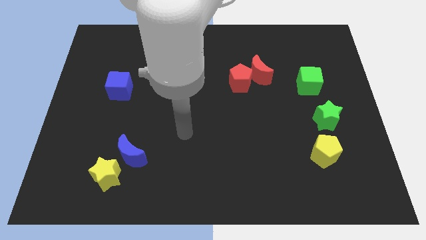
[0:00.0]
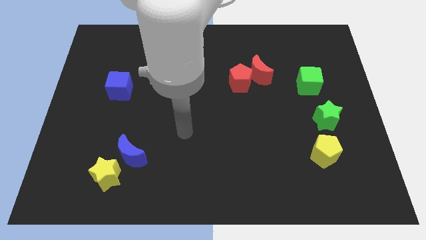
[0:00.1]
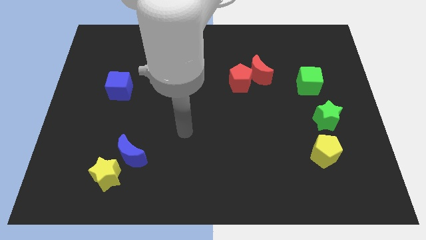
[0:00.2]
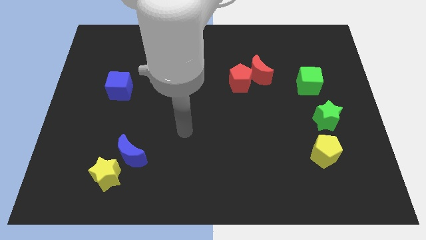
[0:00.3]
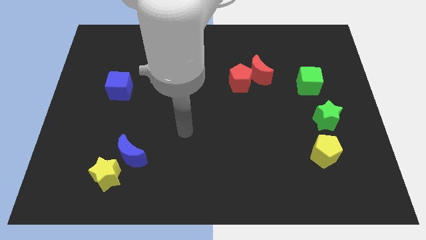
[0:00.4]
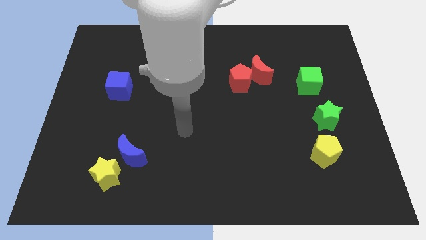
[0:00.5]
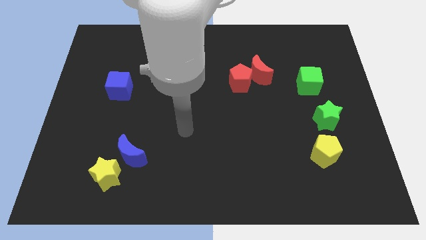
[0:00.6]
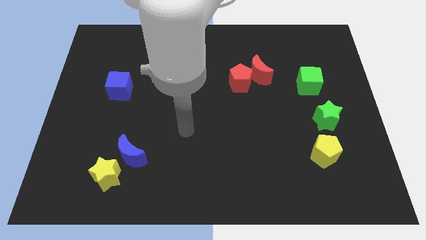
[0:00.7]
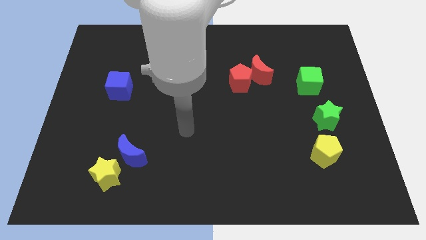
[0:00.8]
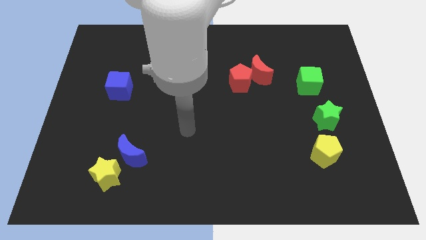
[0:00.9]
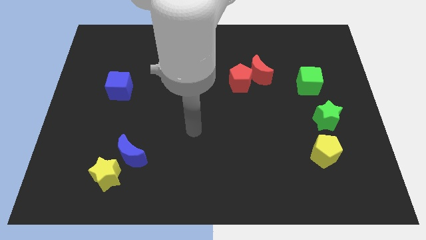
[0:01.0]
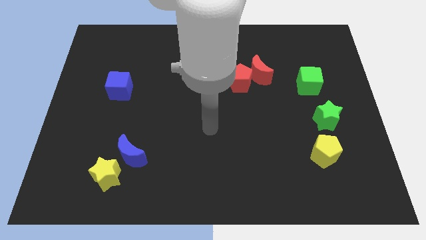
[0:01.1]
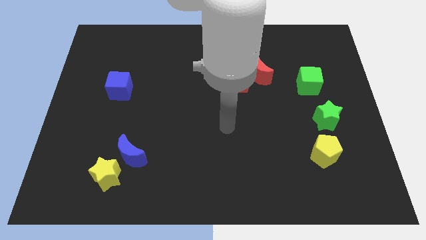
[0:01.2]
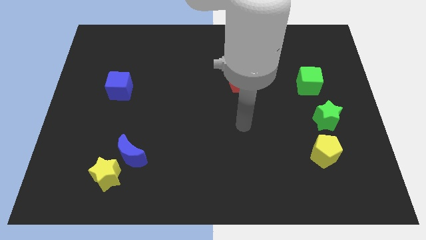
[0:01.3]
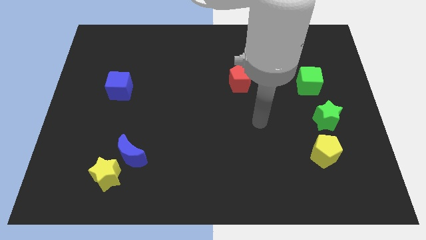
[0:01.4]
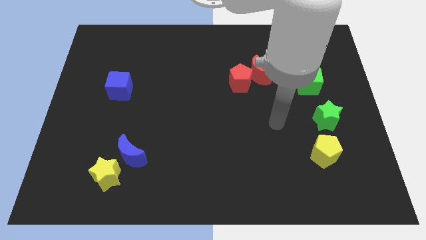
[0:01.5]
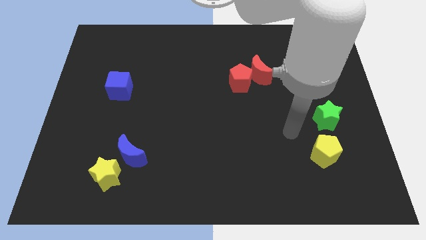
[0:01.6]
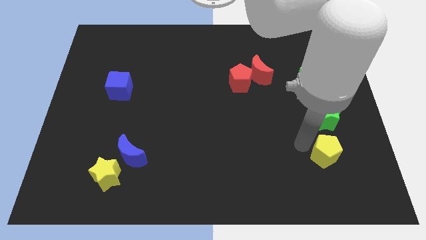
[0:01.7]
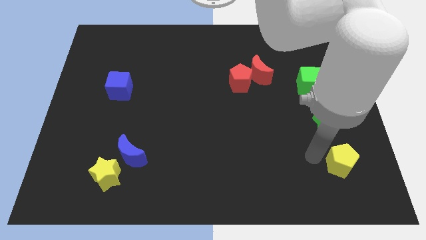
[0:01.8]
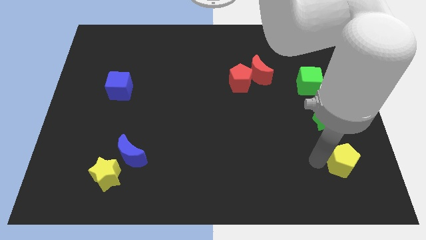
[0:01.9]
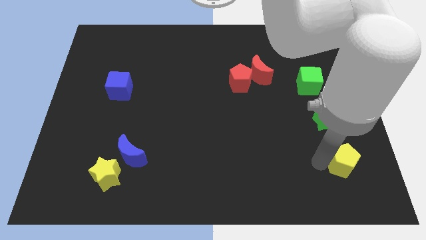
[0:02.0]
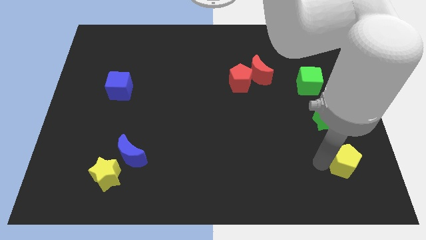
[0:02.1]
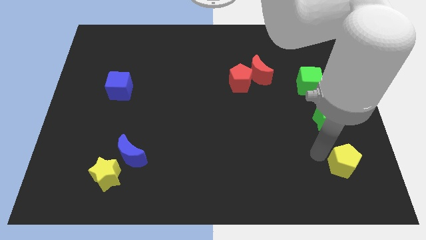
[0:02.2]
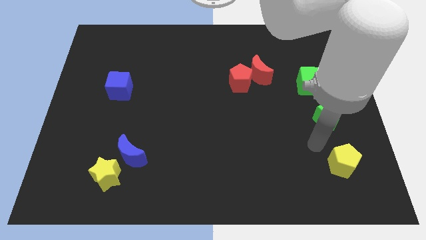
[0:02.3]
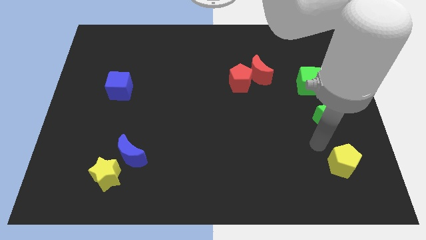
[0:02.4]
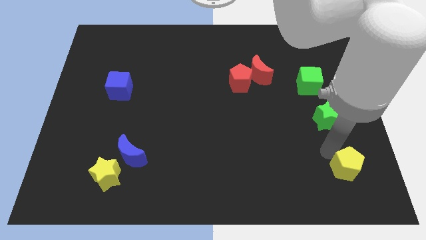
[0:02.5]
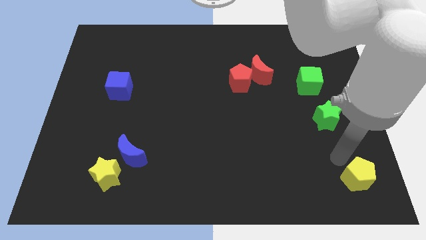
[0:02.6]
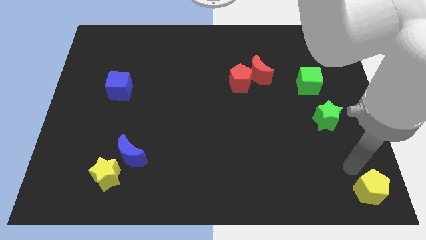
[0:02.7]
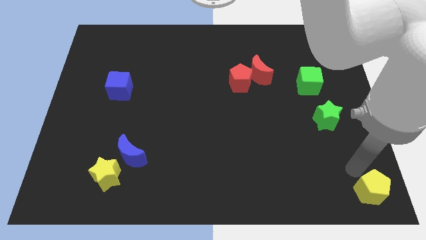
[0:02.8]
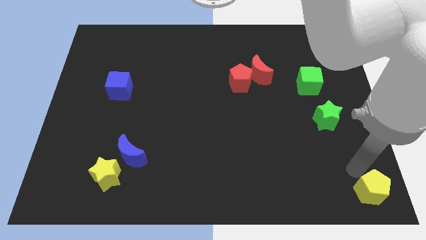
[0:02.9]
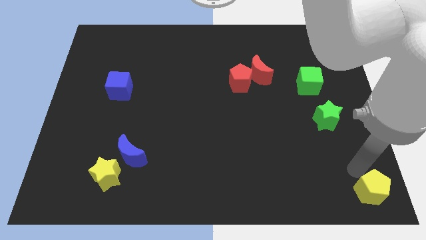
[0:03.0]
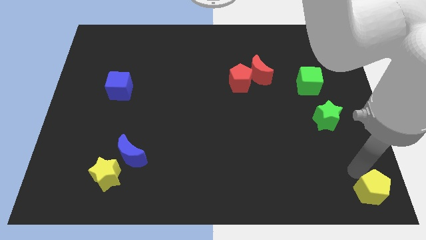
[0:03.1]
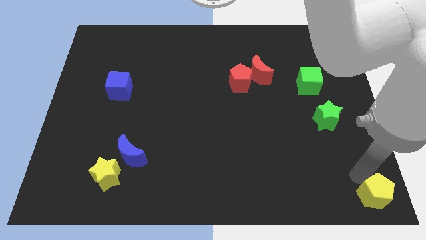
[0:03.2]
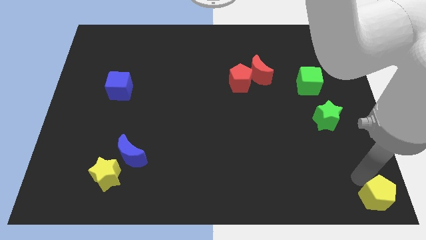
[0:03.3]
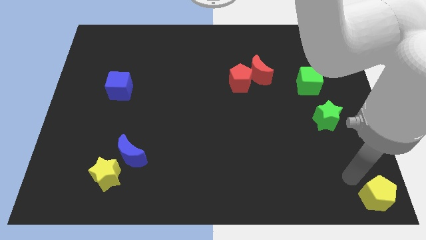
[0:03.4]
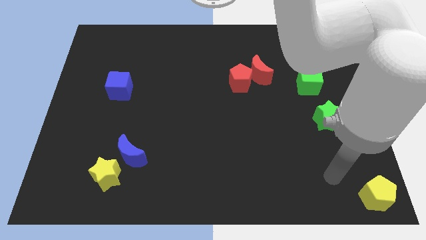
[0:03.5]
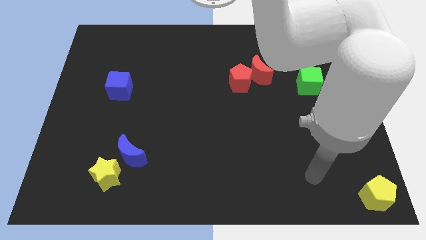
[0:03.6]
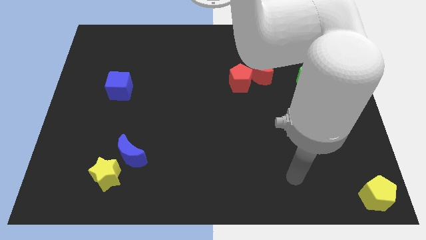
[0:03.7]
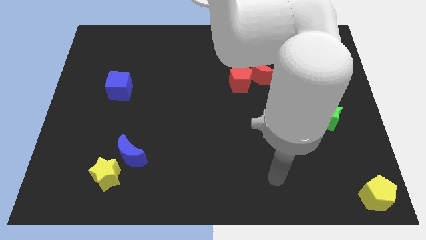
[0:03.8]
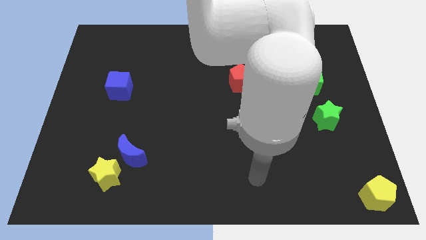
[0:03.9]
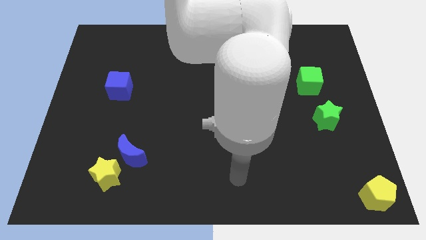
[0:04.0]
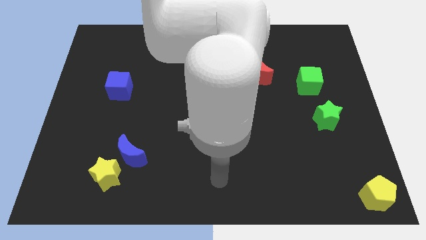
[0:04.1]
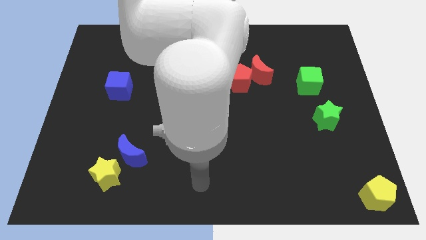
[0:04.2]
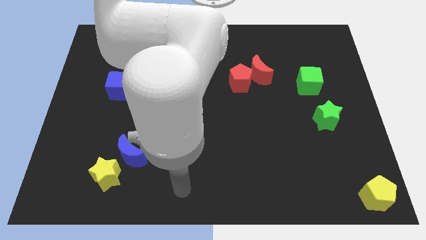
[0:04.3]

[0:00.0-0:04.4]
move the yellow pentagon towards the right bottom corner of the board

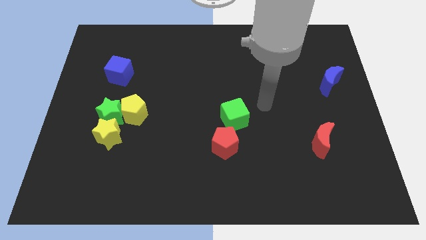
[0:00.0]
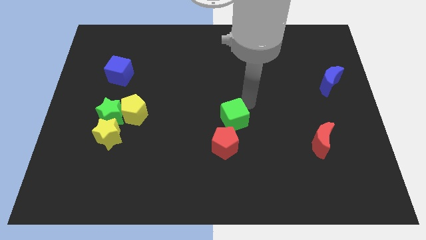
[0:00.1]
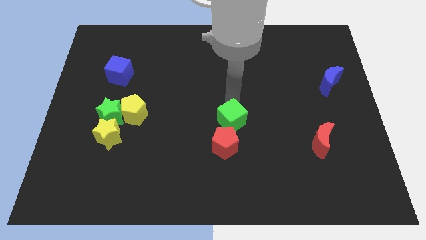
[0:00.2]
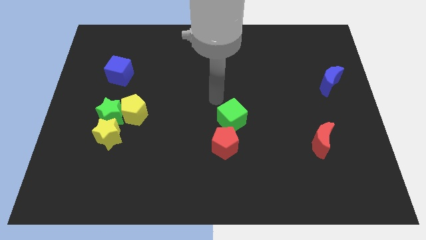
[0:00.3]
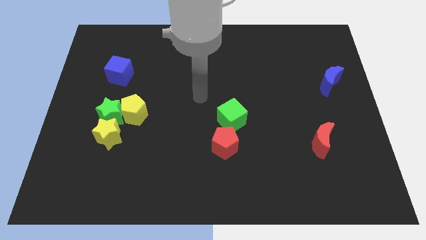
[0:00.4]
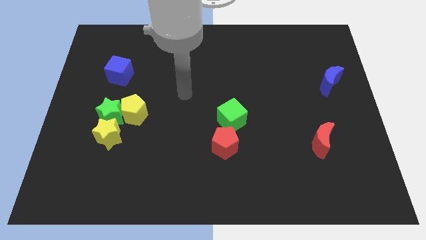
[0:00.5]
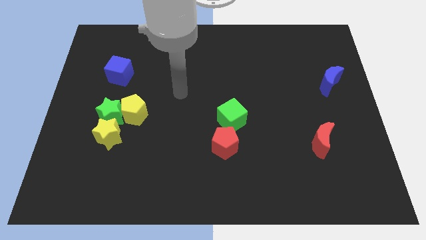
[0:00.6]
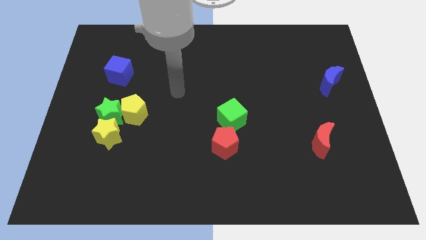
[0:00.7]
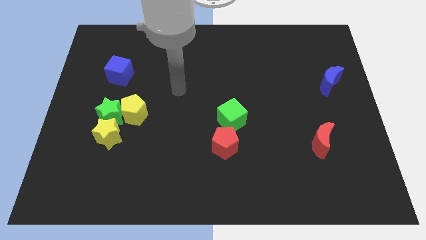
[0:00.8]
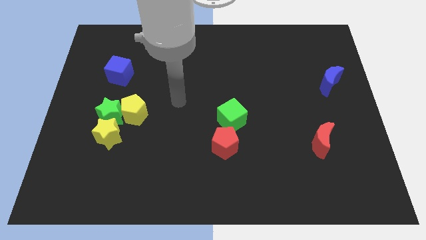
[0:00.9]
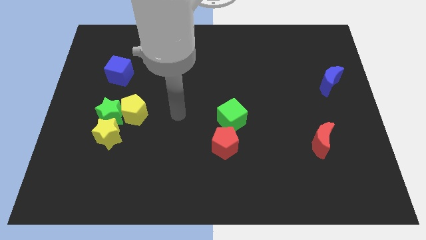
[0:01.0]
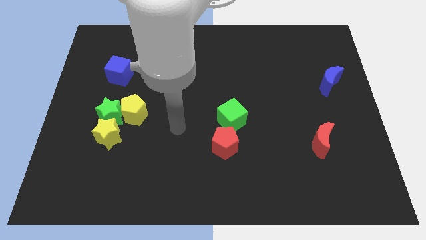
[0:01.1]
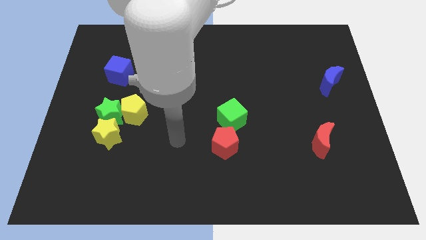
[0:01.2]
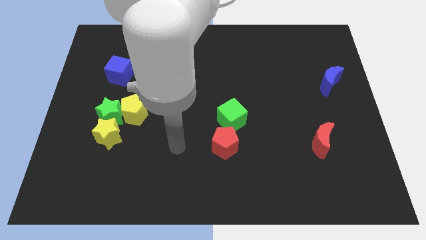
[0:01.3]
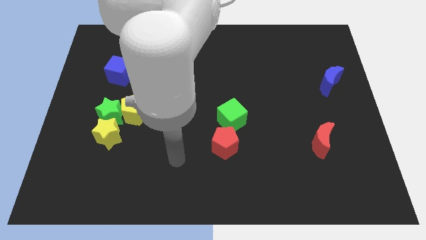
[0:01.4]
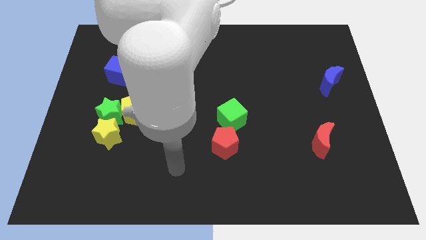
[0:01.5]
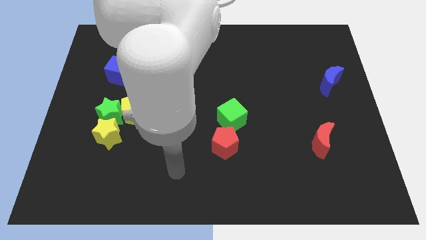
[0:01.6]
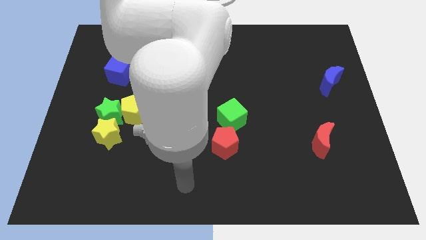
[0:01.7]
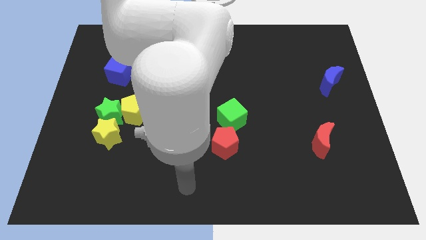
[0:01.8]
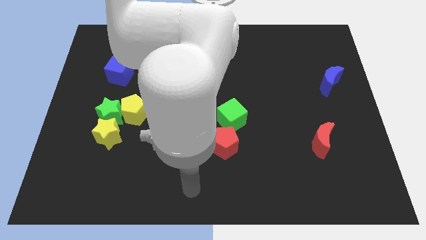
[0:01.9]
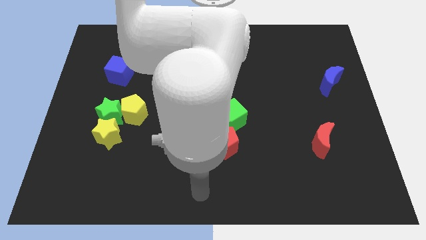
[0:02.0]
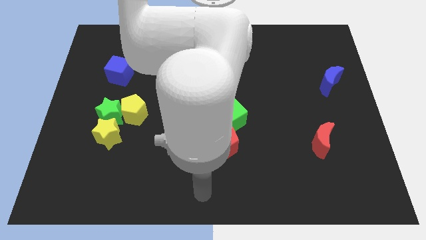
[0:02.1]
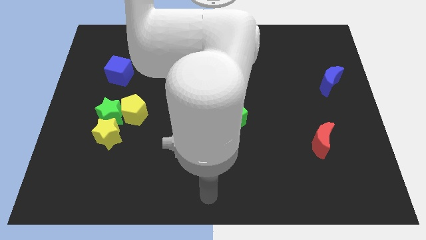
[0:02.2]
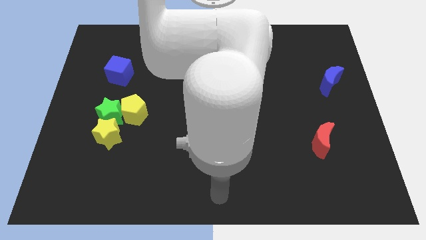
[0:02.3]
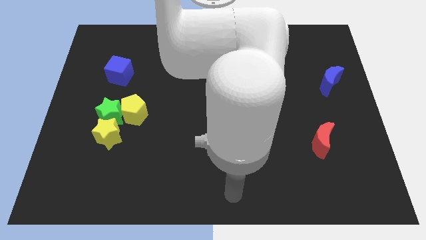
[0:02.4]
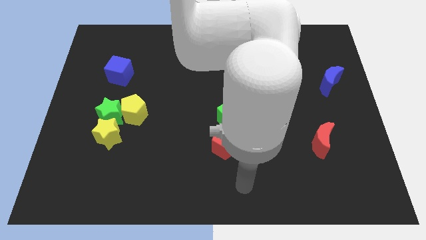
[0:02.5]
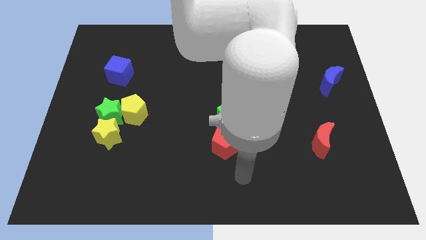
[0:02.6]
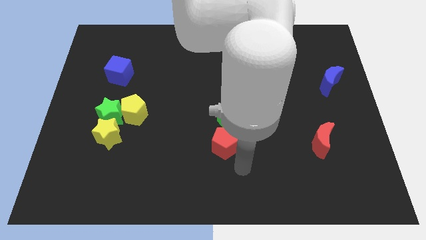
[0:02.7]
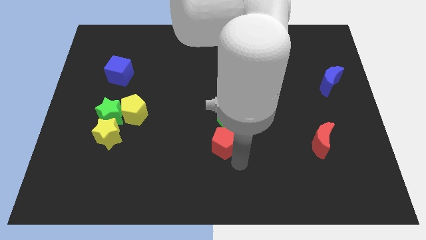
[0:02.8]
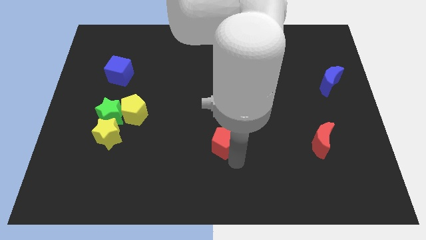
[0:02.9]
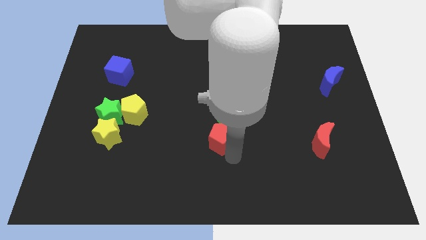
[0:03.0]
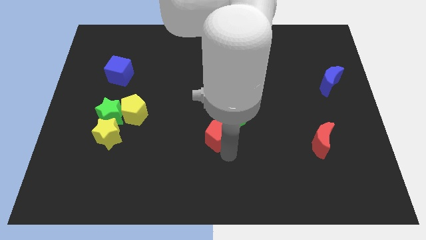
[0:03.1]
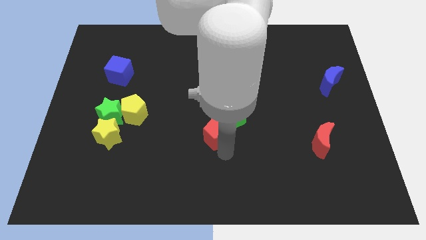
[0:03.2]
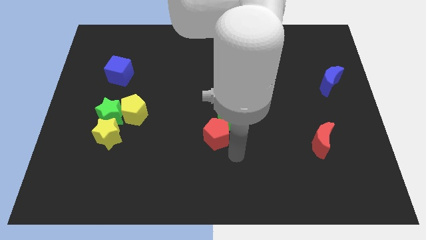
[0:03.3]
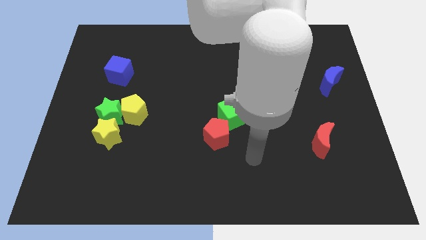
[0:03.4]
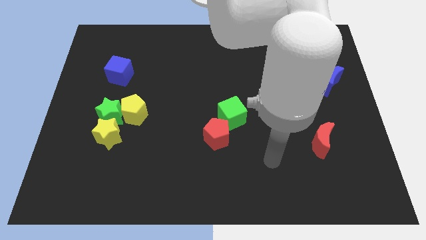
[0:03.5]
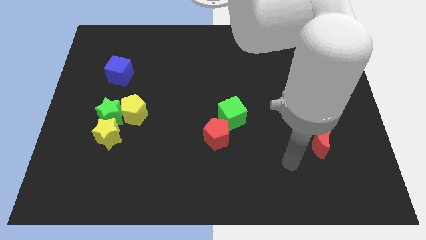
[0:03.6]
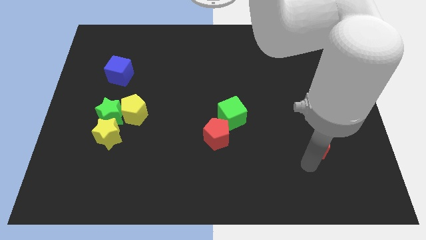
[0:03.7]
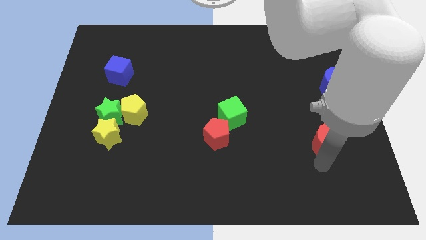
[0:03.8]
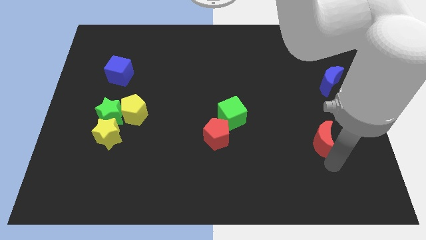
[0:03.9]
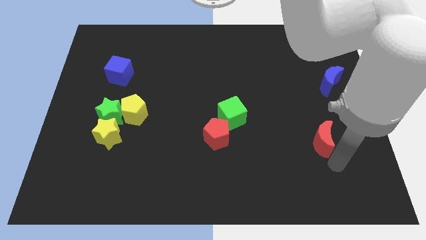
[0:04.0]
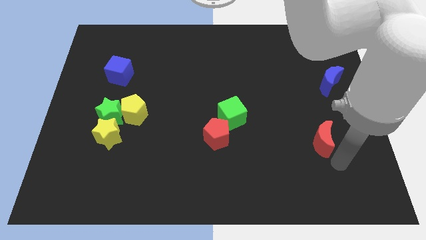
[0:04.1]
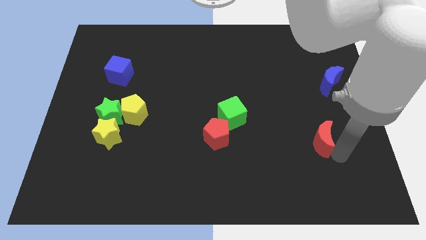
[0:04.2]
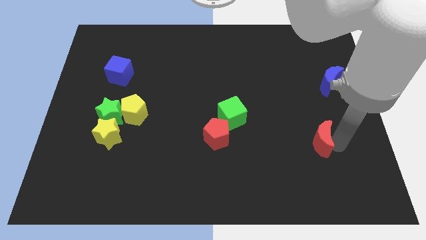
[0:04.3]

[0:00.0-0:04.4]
move the arm to the right of the red crescent

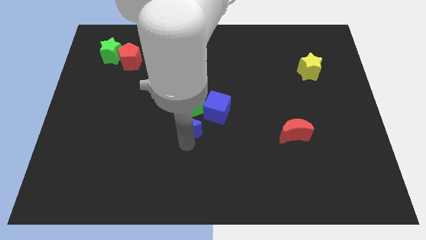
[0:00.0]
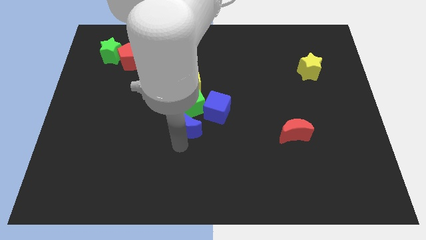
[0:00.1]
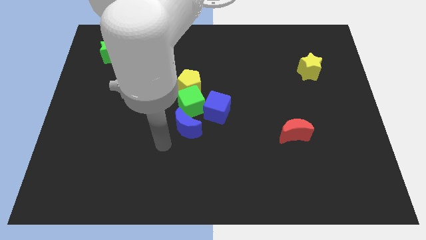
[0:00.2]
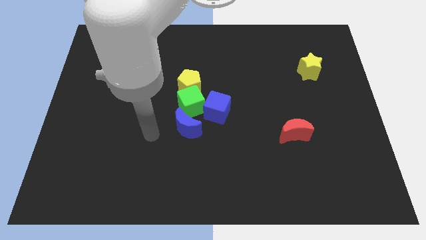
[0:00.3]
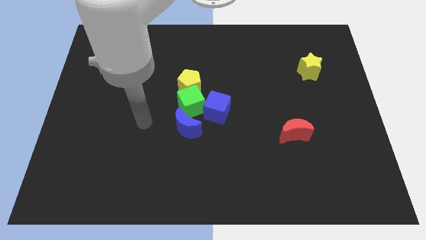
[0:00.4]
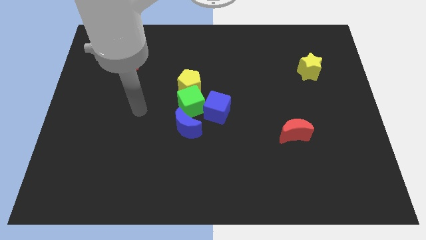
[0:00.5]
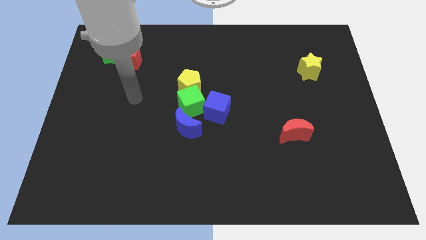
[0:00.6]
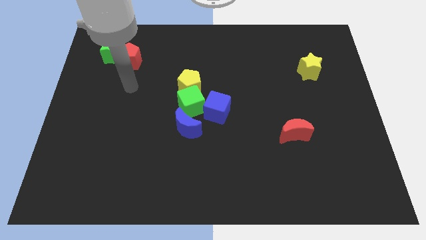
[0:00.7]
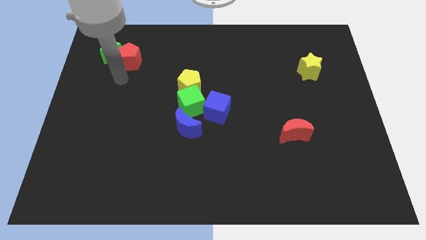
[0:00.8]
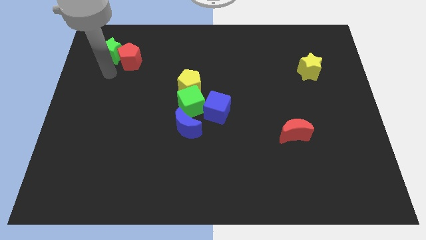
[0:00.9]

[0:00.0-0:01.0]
place your arm to the bottom of green star
